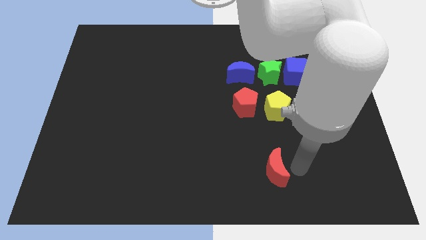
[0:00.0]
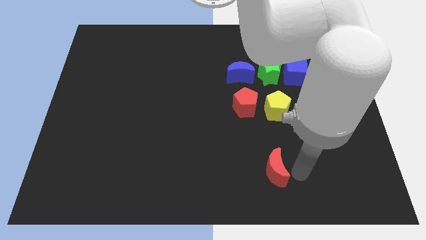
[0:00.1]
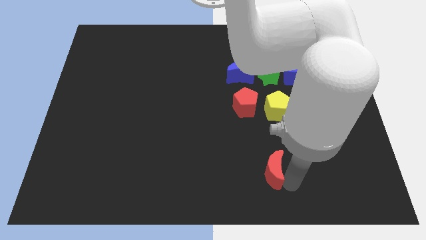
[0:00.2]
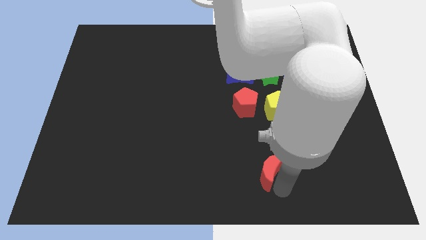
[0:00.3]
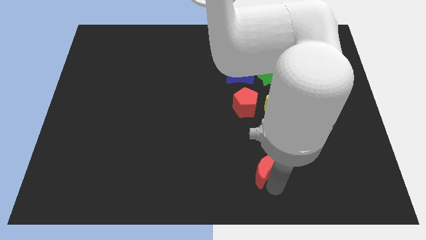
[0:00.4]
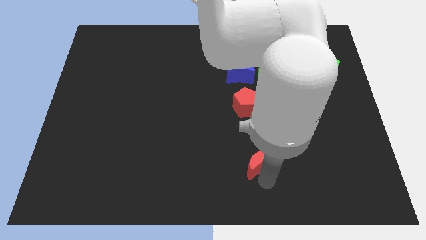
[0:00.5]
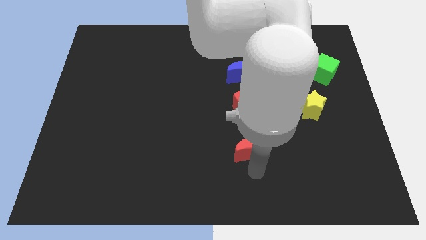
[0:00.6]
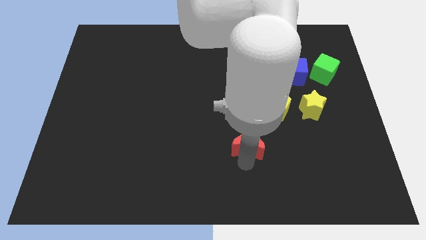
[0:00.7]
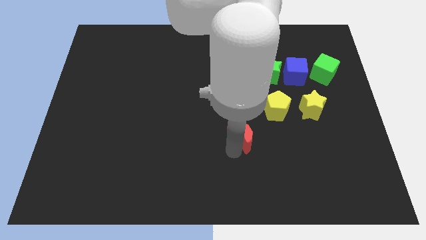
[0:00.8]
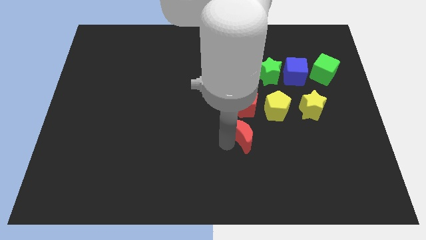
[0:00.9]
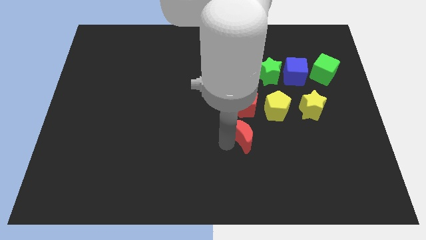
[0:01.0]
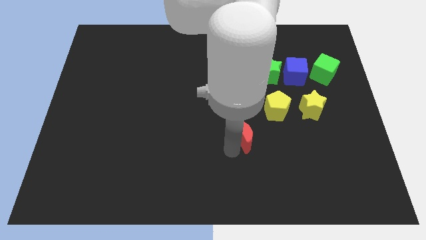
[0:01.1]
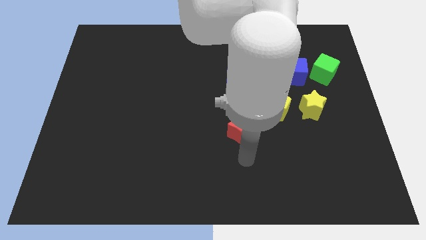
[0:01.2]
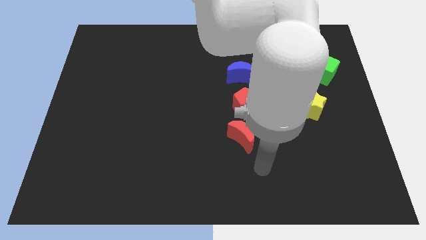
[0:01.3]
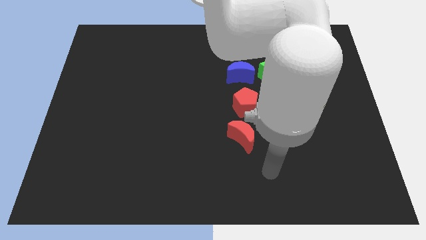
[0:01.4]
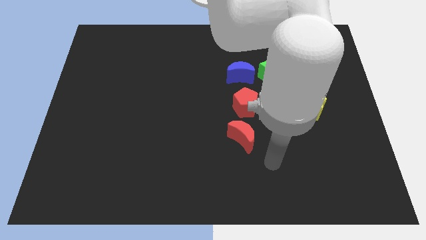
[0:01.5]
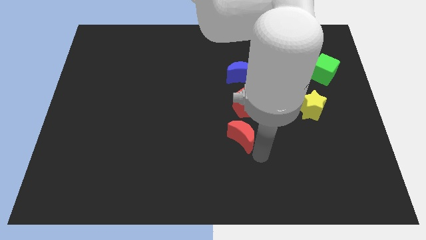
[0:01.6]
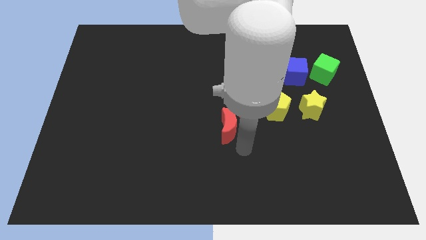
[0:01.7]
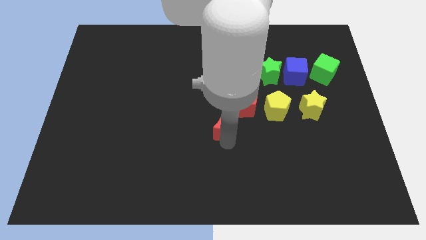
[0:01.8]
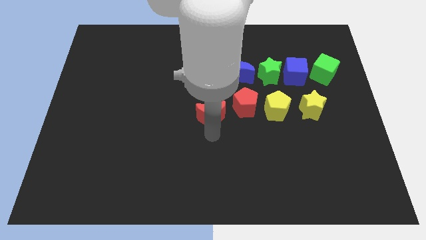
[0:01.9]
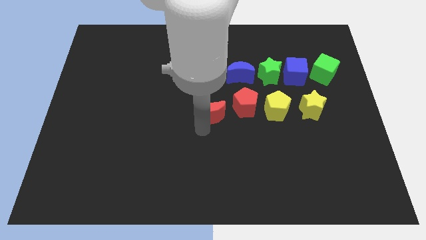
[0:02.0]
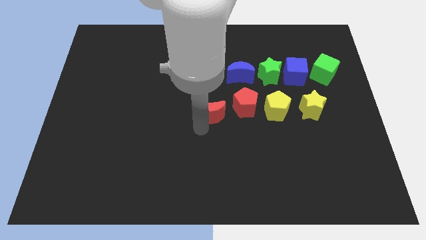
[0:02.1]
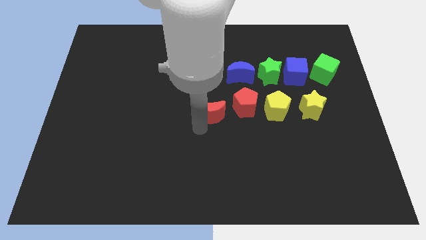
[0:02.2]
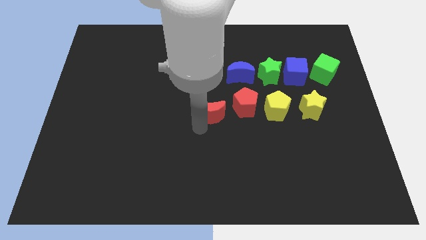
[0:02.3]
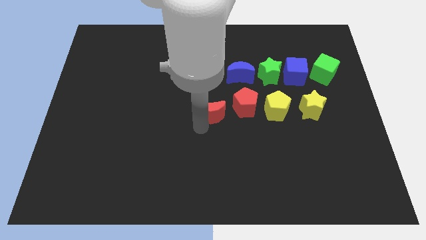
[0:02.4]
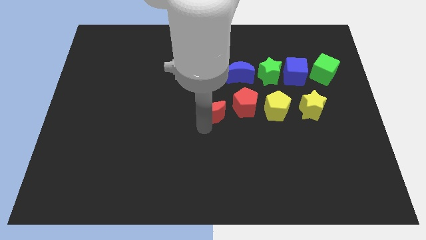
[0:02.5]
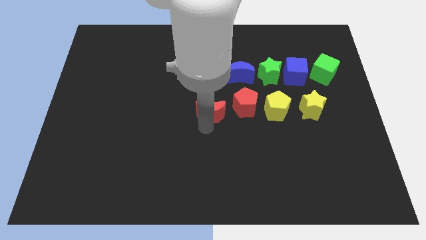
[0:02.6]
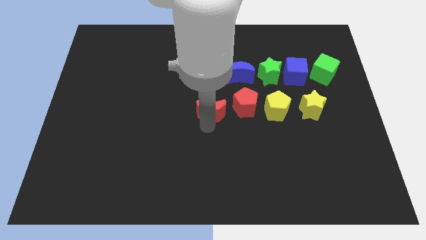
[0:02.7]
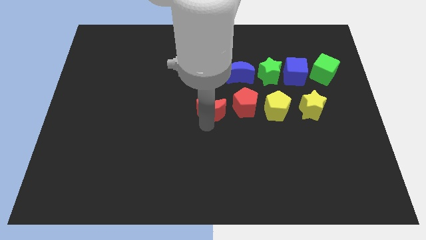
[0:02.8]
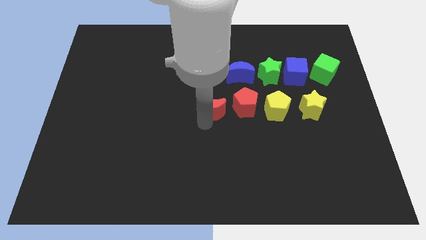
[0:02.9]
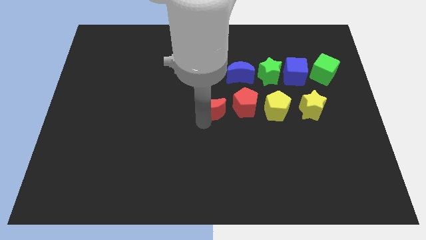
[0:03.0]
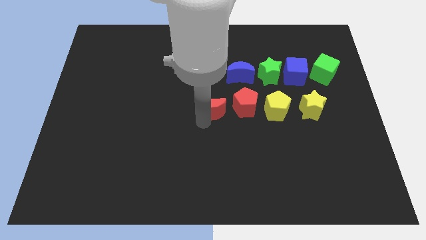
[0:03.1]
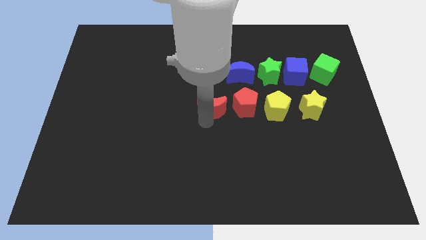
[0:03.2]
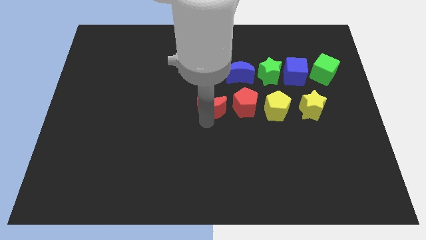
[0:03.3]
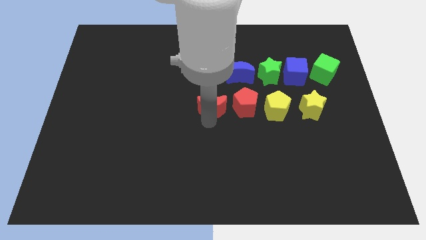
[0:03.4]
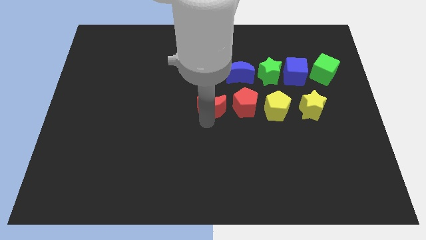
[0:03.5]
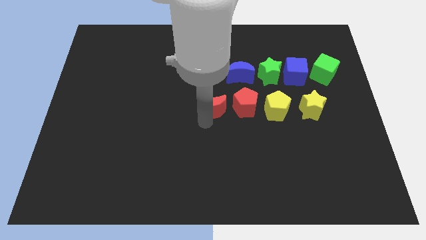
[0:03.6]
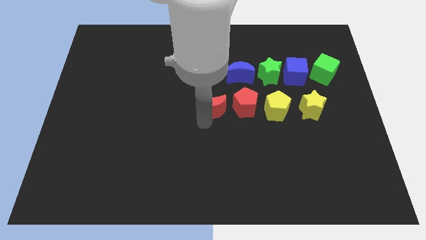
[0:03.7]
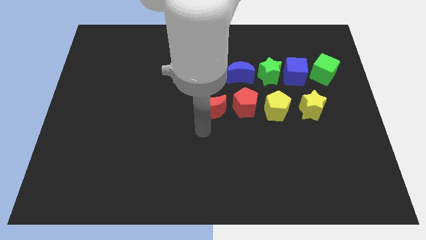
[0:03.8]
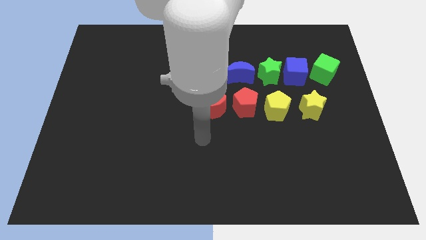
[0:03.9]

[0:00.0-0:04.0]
place red crescent horizontal left to red pentagon

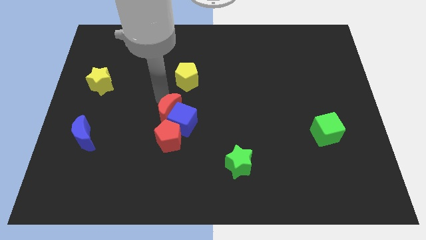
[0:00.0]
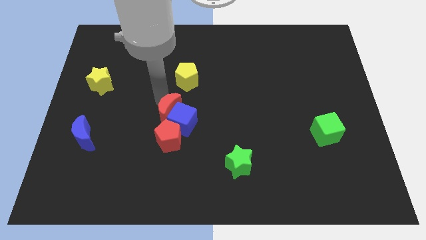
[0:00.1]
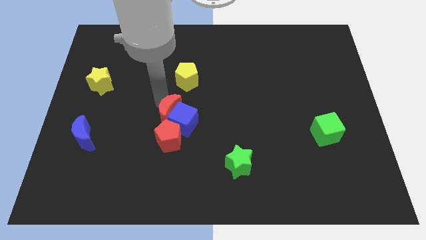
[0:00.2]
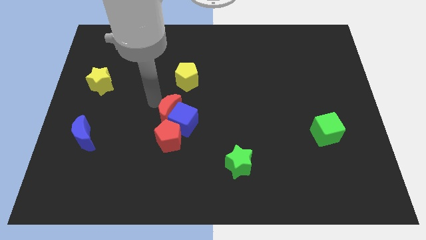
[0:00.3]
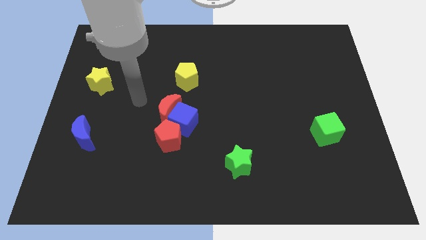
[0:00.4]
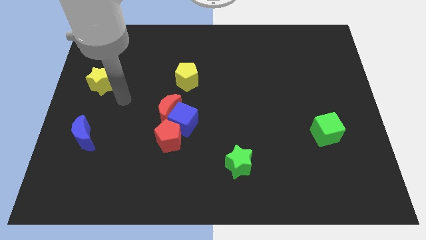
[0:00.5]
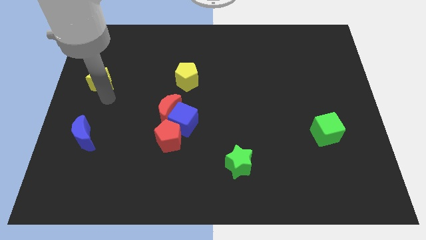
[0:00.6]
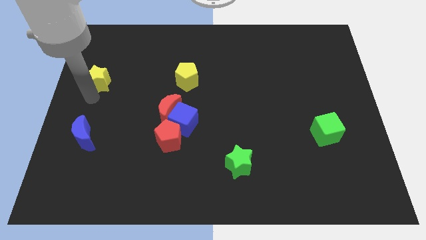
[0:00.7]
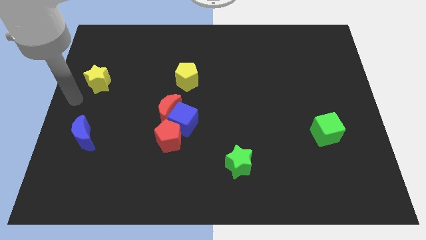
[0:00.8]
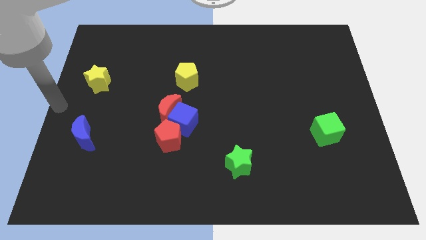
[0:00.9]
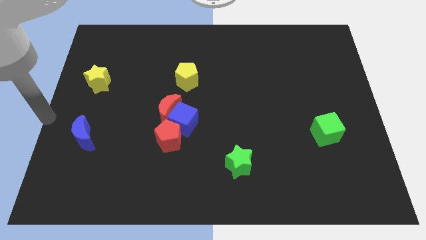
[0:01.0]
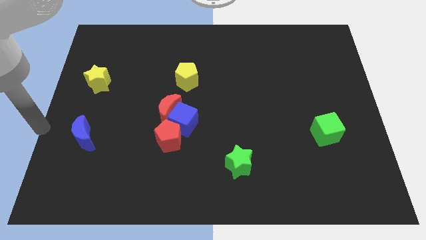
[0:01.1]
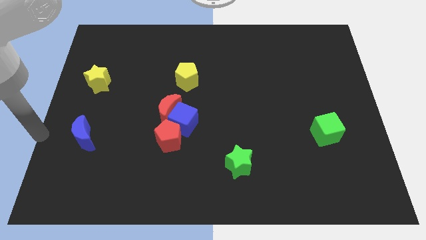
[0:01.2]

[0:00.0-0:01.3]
move your arm towards the bottom left

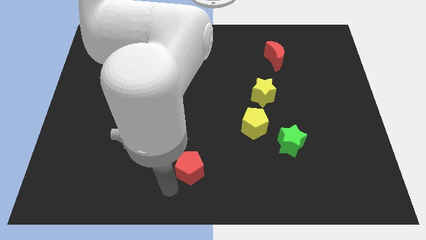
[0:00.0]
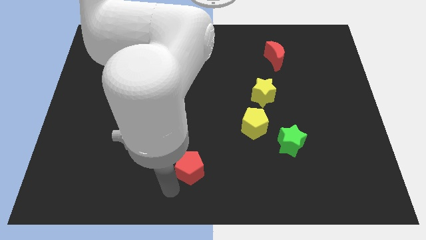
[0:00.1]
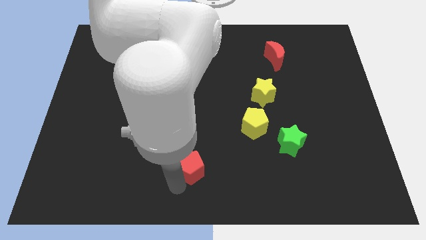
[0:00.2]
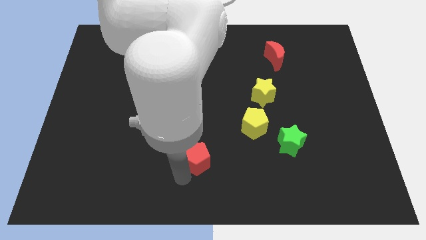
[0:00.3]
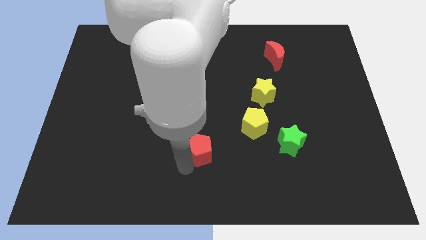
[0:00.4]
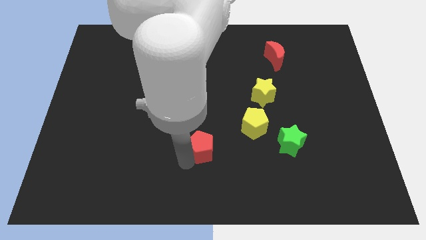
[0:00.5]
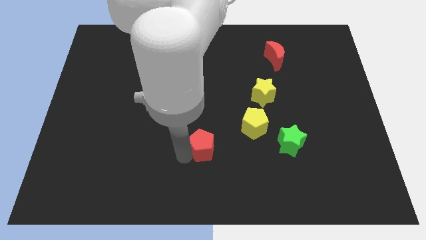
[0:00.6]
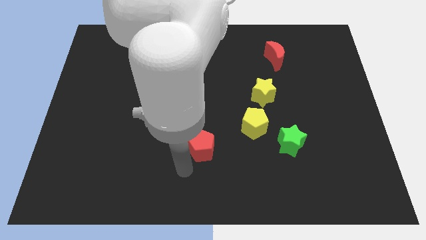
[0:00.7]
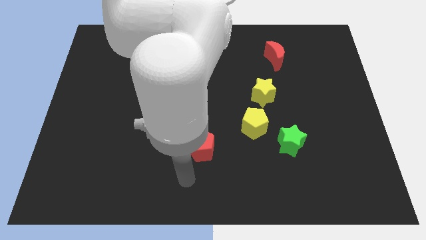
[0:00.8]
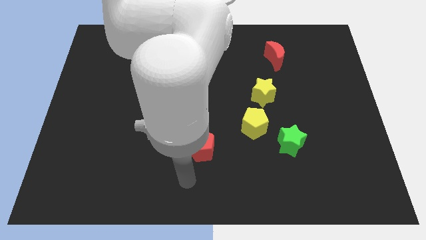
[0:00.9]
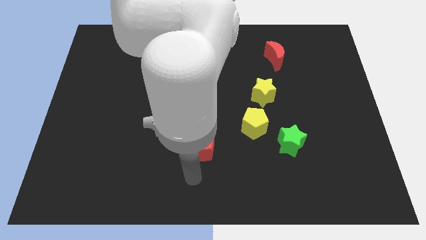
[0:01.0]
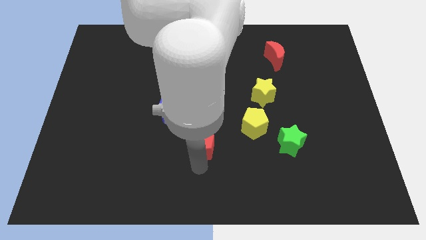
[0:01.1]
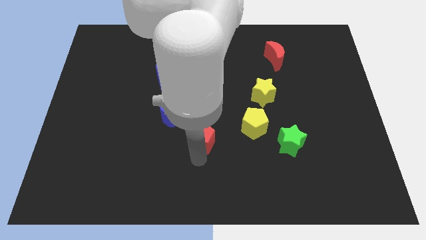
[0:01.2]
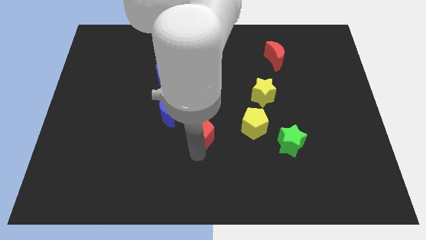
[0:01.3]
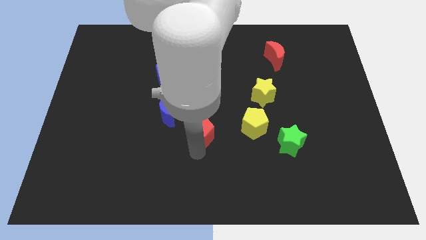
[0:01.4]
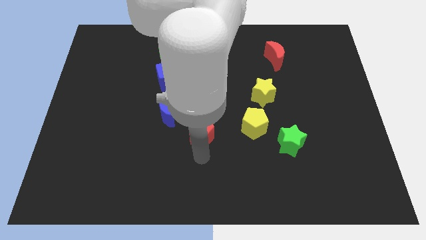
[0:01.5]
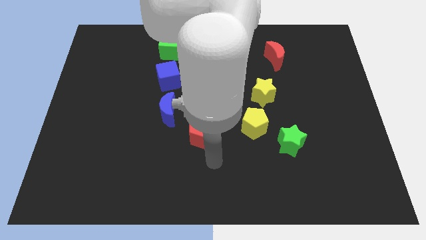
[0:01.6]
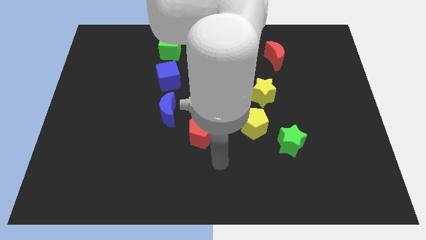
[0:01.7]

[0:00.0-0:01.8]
move the red pentagon to bottom right corner of the blue crescent

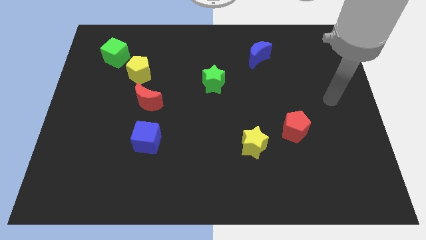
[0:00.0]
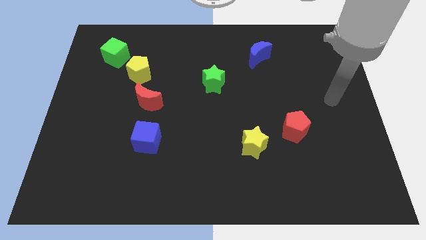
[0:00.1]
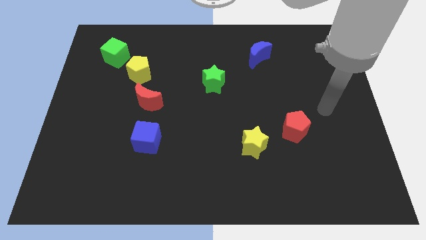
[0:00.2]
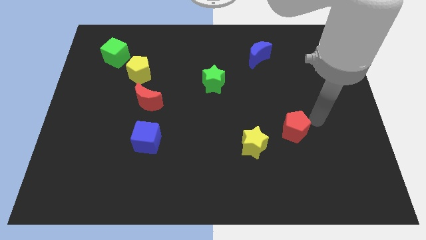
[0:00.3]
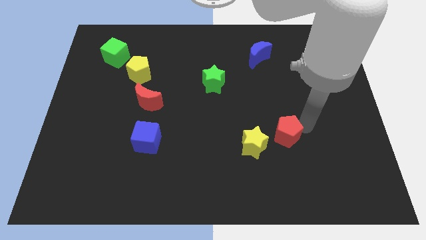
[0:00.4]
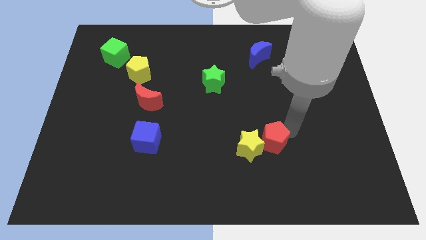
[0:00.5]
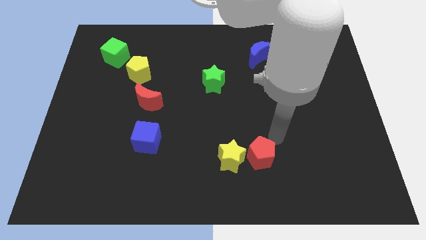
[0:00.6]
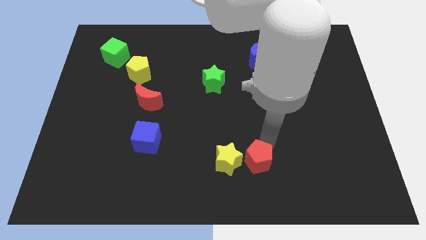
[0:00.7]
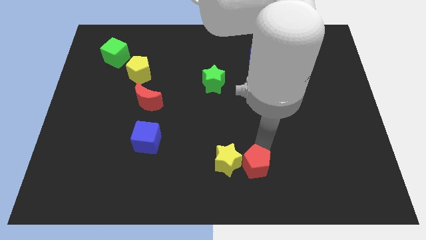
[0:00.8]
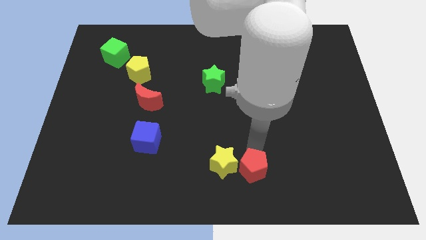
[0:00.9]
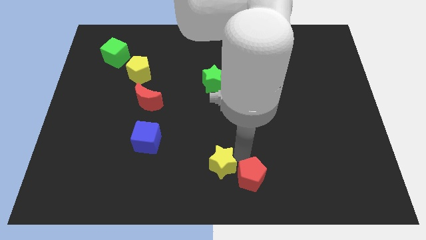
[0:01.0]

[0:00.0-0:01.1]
push the red pentagon into the yellow star

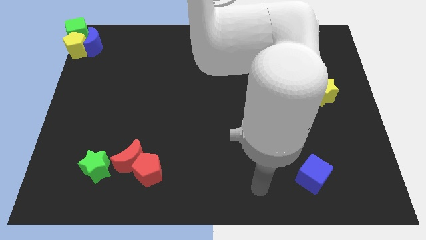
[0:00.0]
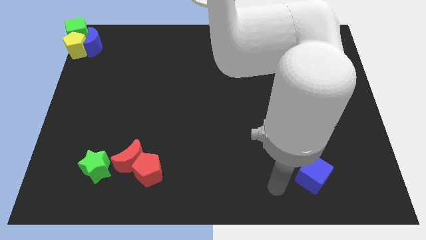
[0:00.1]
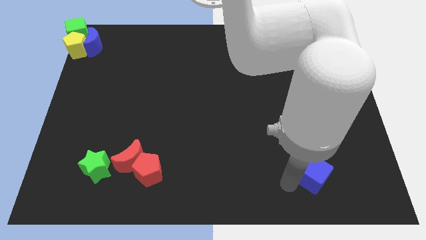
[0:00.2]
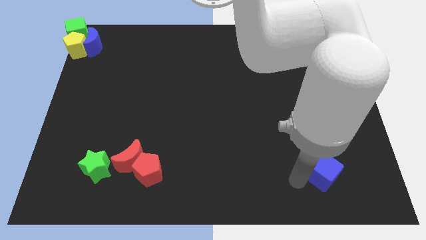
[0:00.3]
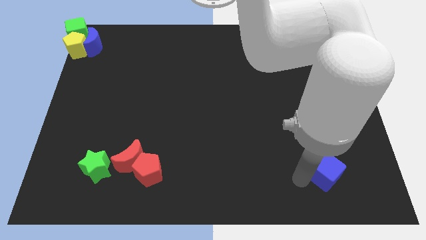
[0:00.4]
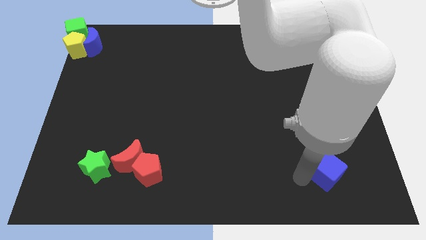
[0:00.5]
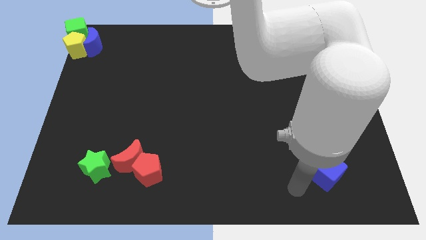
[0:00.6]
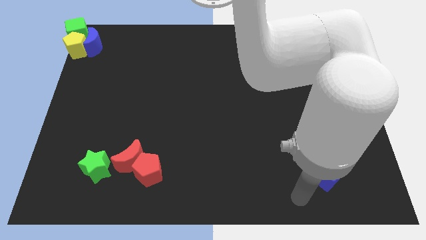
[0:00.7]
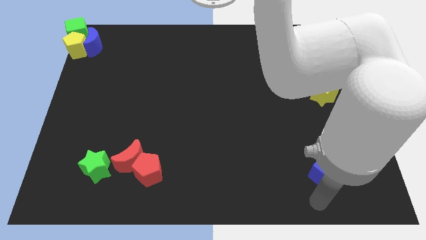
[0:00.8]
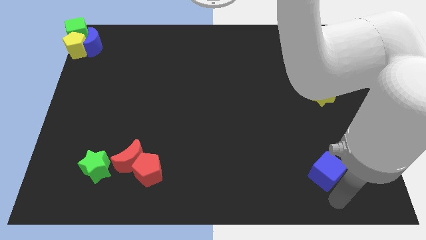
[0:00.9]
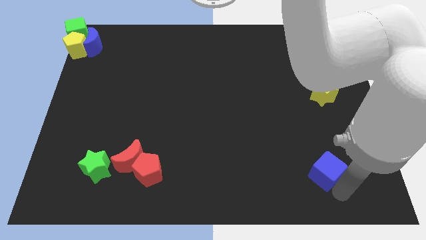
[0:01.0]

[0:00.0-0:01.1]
tap the left side of the blue cube
